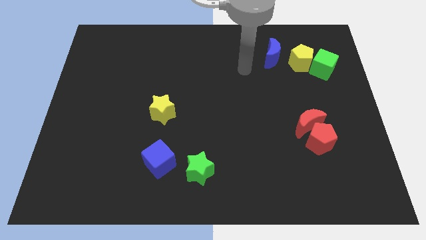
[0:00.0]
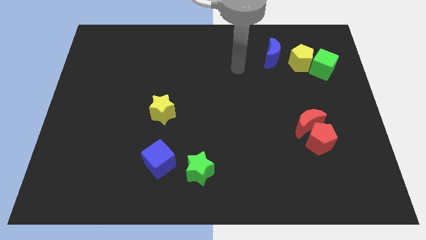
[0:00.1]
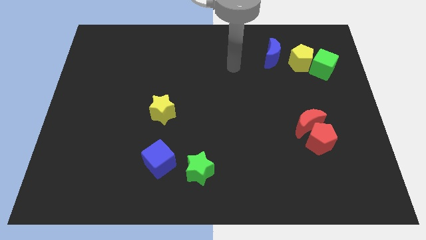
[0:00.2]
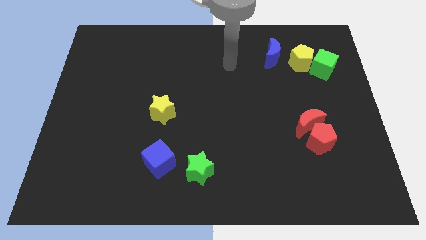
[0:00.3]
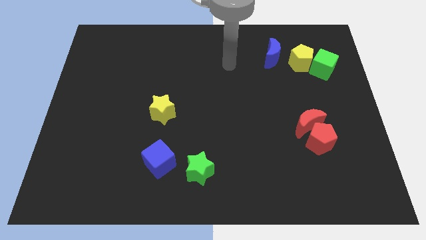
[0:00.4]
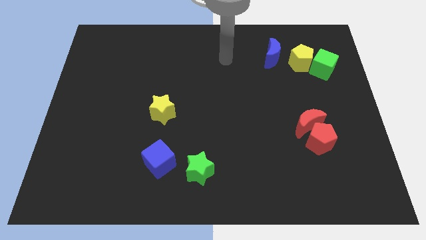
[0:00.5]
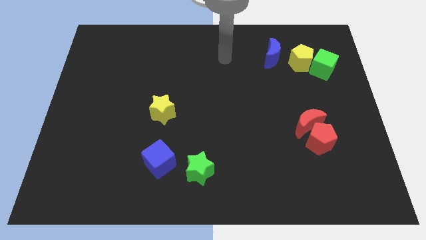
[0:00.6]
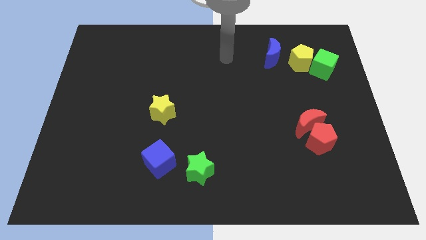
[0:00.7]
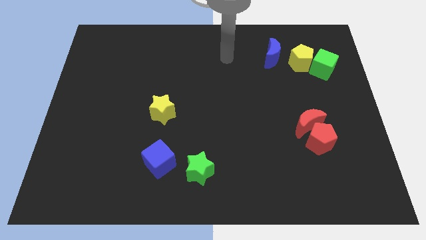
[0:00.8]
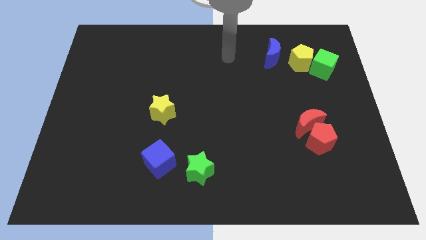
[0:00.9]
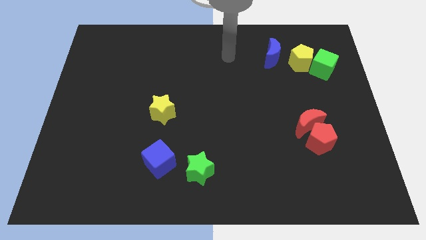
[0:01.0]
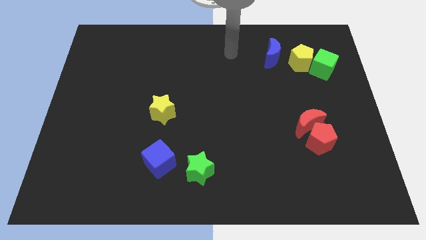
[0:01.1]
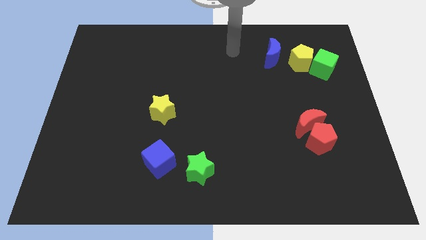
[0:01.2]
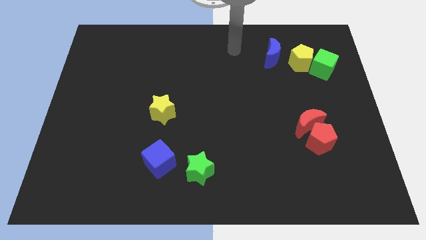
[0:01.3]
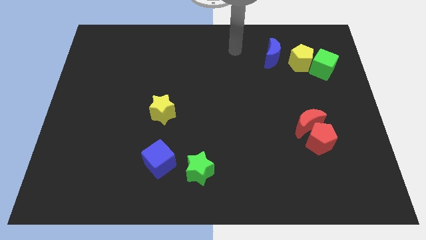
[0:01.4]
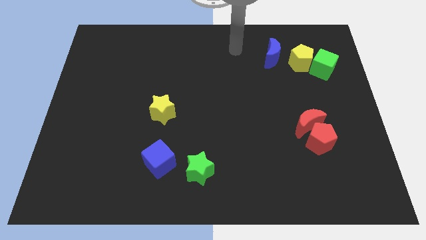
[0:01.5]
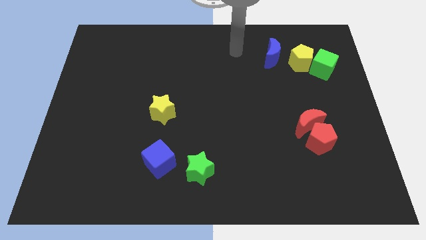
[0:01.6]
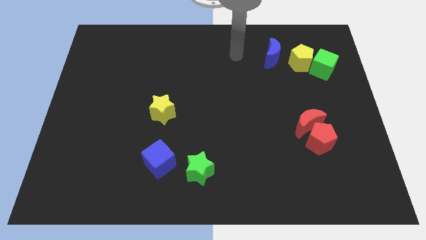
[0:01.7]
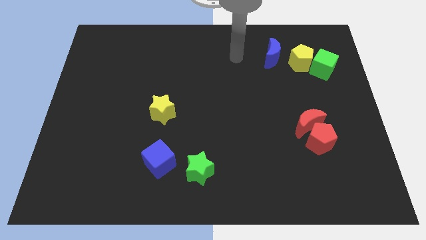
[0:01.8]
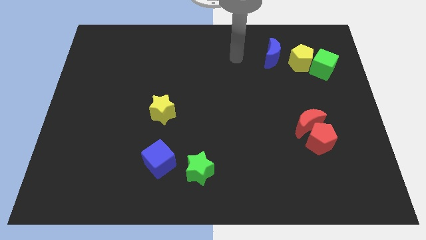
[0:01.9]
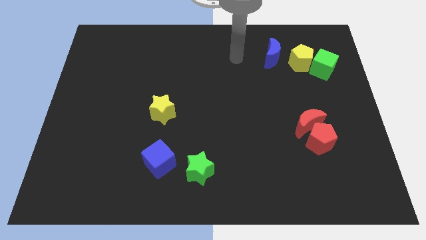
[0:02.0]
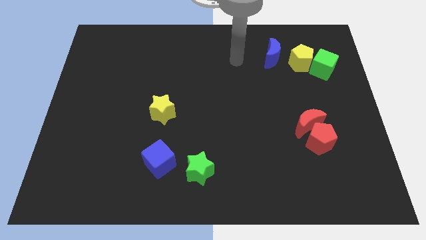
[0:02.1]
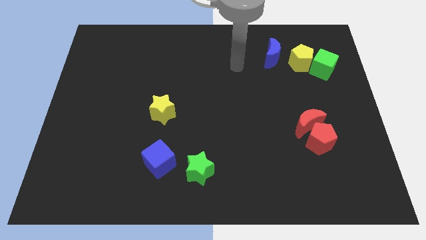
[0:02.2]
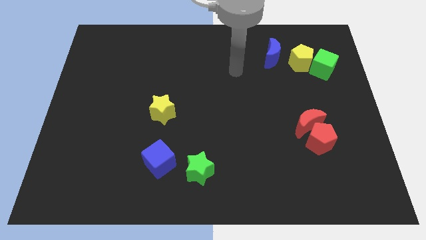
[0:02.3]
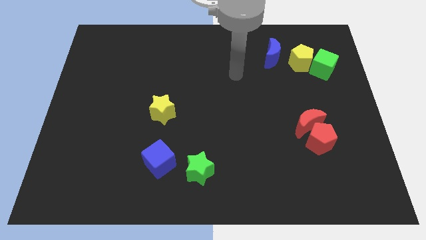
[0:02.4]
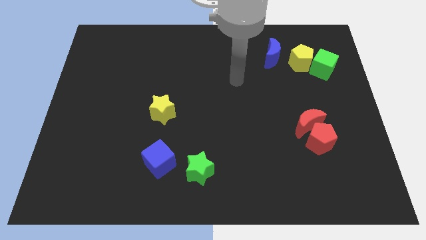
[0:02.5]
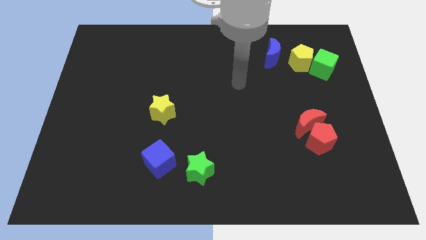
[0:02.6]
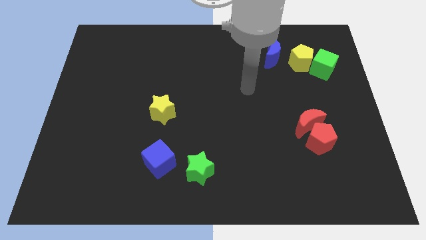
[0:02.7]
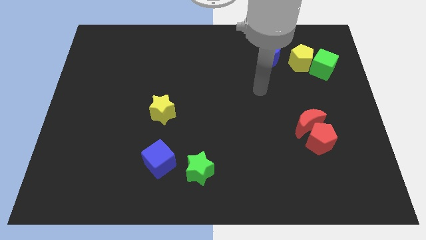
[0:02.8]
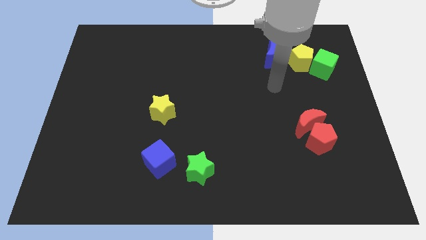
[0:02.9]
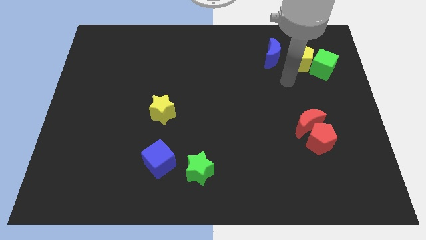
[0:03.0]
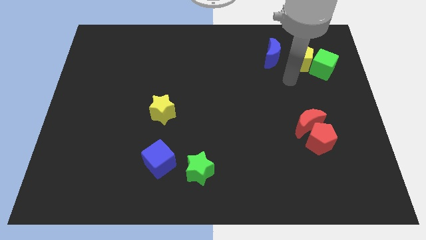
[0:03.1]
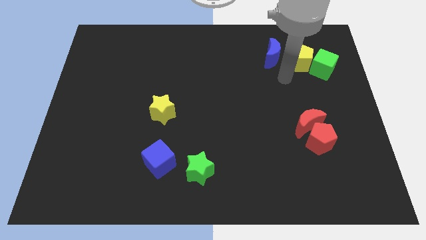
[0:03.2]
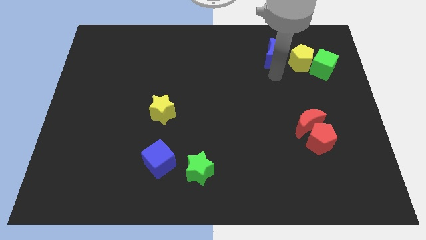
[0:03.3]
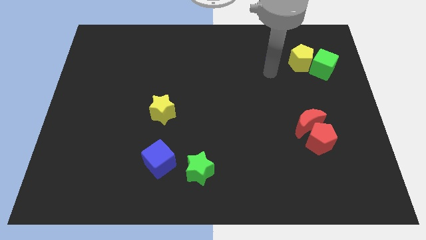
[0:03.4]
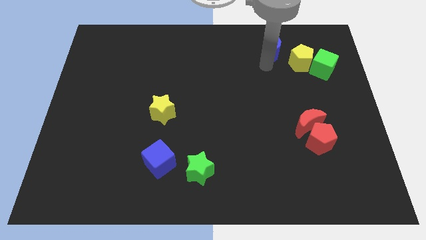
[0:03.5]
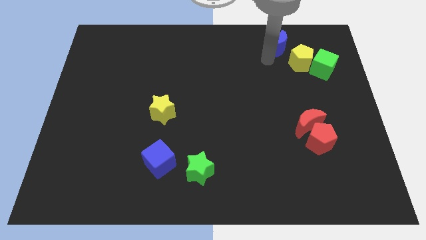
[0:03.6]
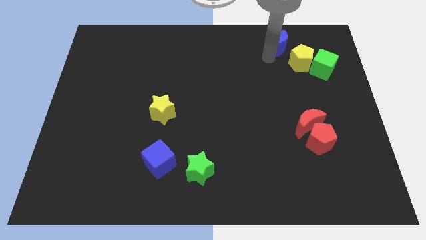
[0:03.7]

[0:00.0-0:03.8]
move your arm towards the center

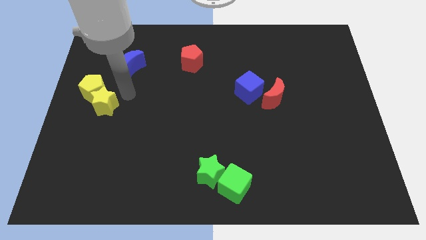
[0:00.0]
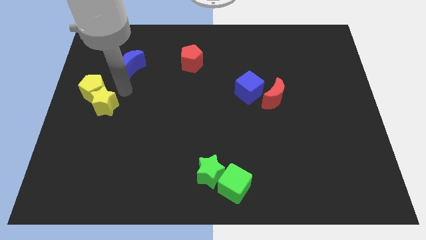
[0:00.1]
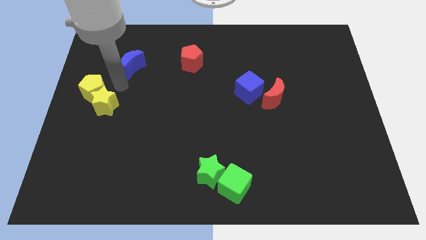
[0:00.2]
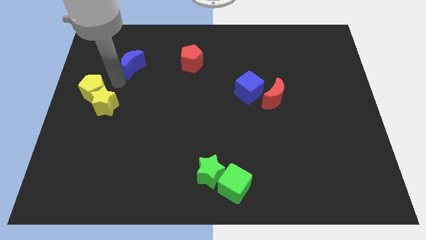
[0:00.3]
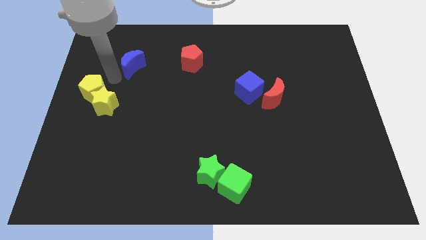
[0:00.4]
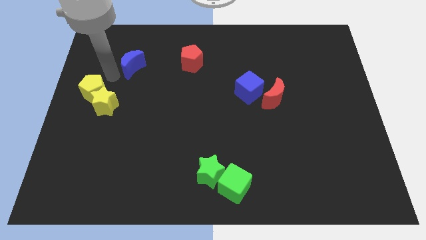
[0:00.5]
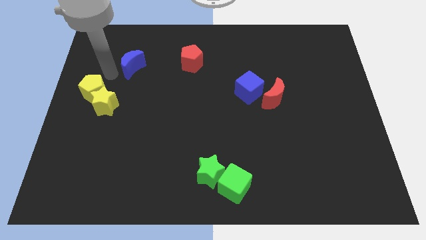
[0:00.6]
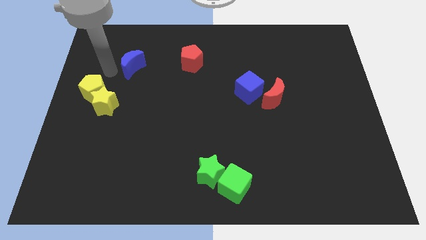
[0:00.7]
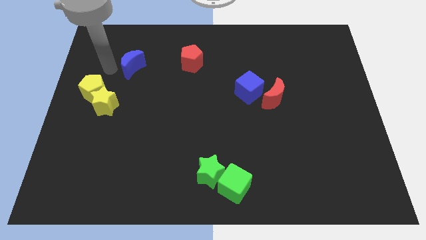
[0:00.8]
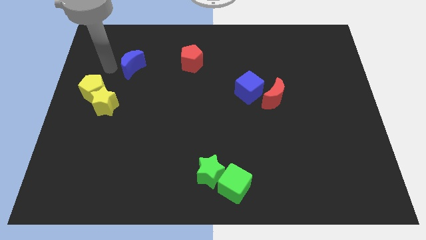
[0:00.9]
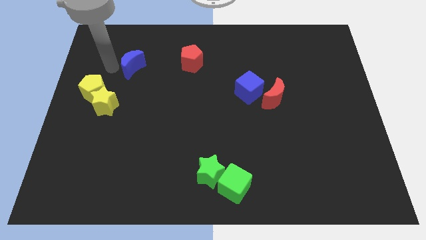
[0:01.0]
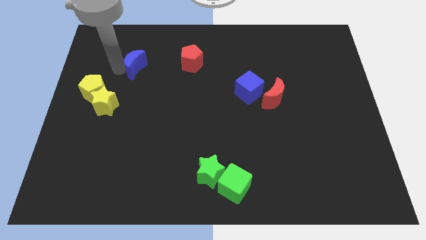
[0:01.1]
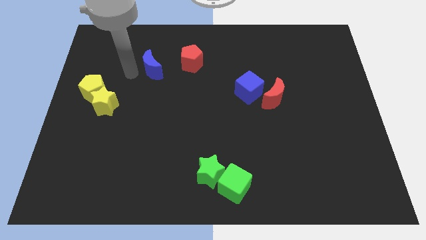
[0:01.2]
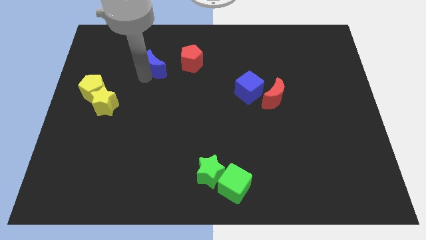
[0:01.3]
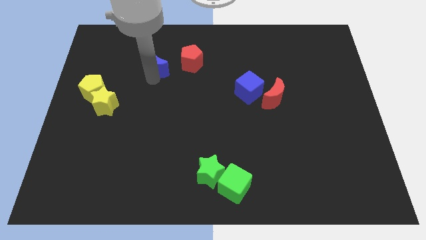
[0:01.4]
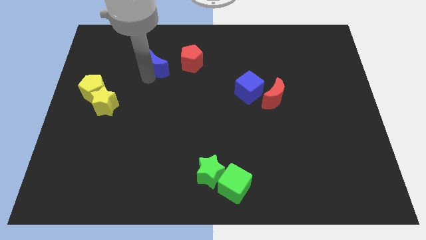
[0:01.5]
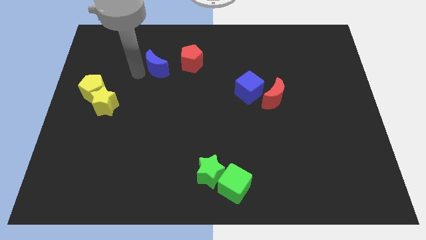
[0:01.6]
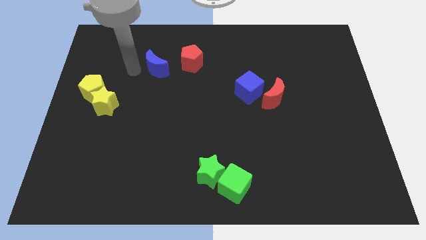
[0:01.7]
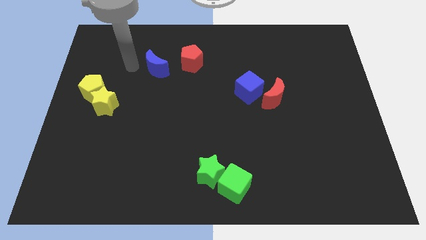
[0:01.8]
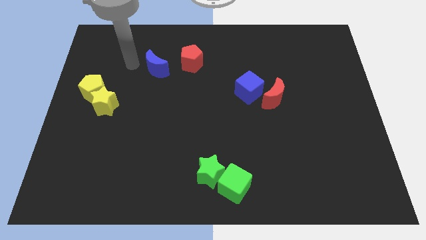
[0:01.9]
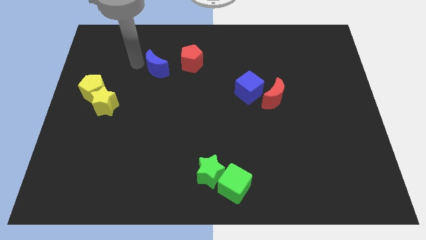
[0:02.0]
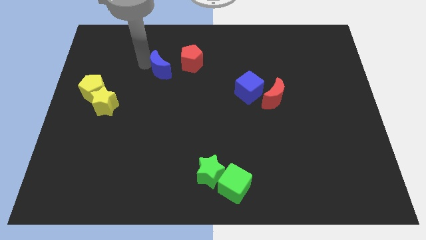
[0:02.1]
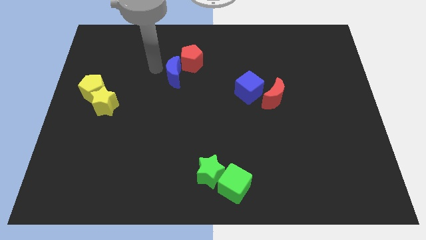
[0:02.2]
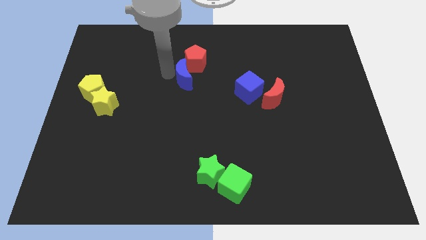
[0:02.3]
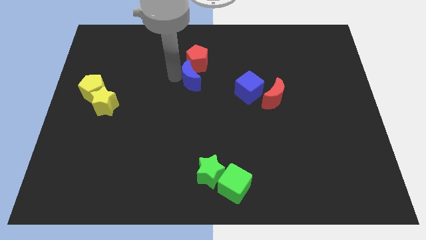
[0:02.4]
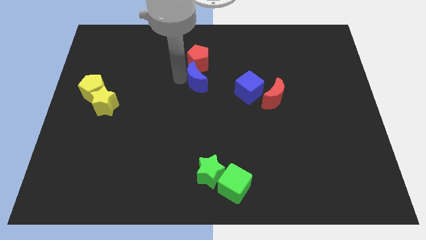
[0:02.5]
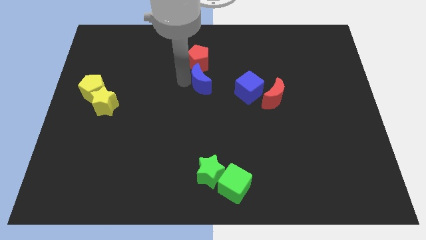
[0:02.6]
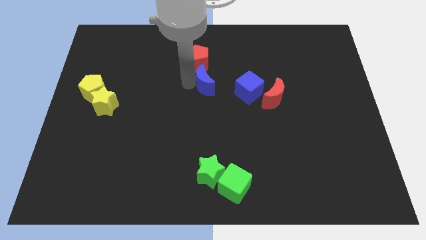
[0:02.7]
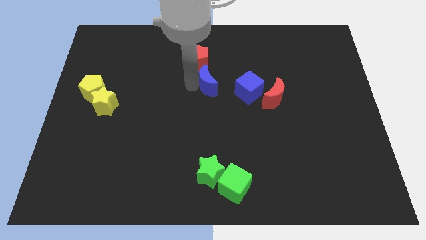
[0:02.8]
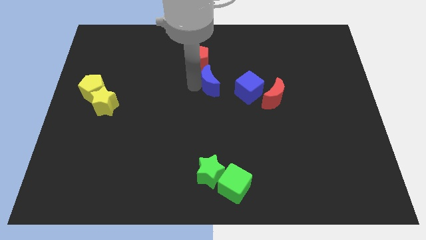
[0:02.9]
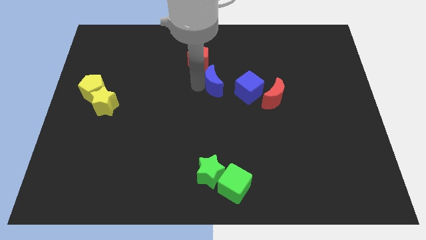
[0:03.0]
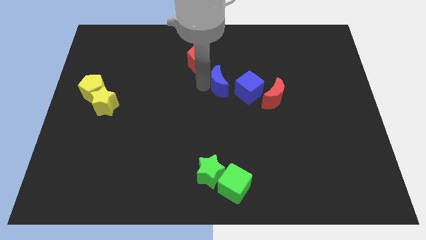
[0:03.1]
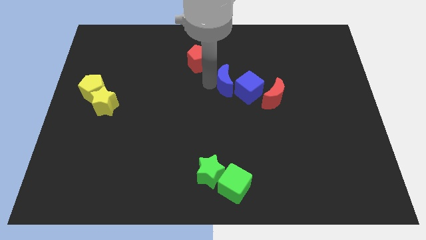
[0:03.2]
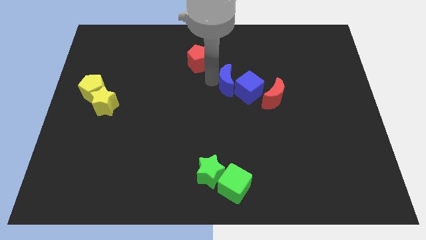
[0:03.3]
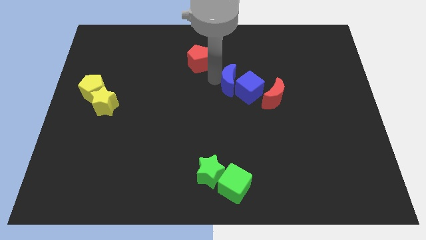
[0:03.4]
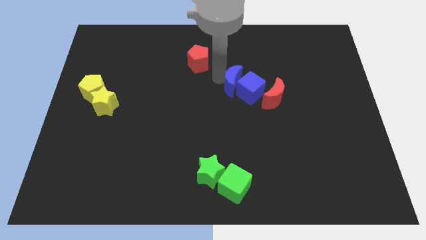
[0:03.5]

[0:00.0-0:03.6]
move blue crescent into blue cube

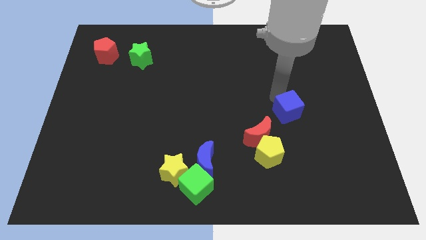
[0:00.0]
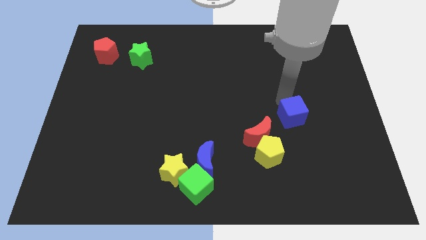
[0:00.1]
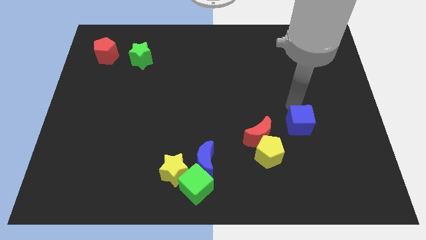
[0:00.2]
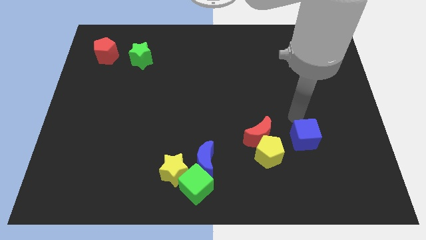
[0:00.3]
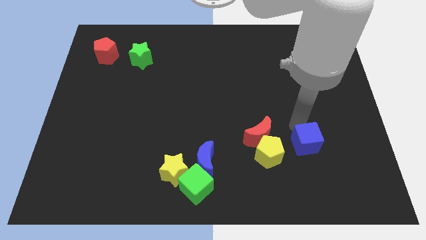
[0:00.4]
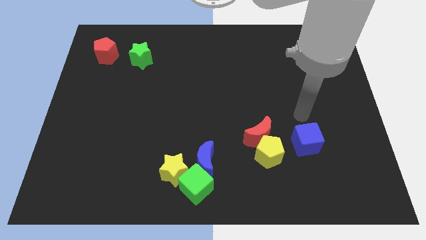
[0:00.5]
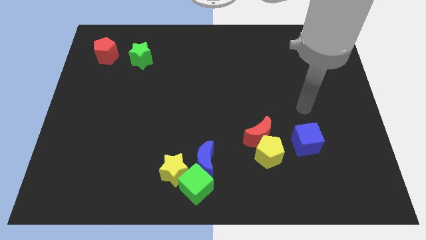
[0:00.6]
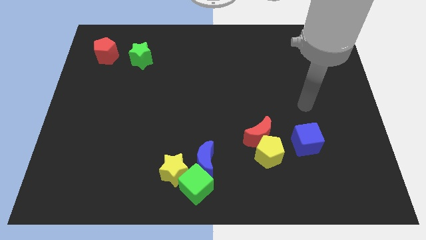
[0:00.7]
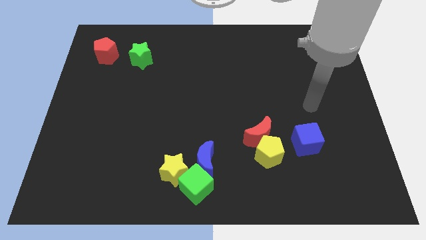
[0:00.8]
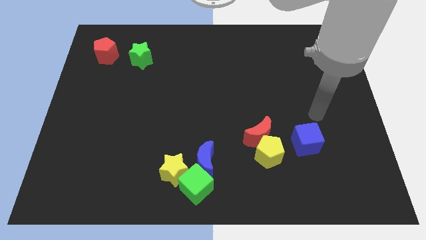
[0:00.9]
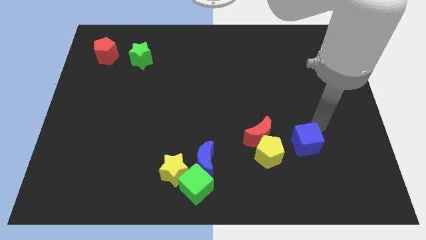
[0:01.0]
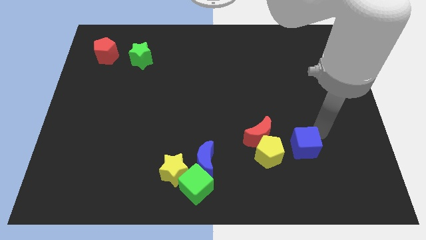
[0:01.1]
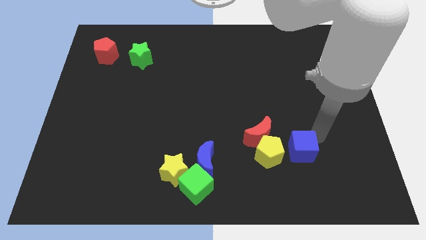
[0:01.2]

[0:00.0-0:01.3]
place blue cube to the right of yellow pentagon

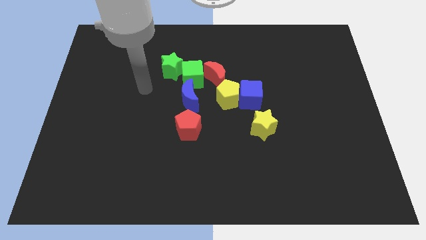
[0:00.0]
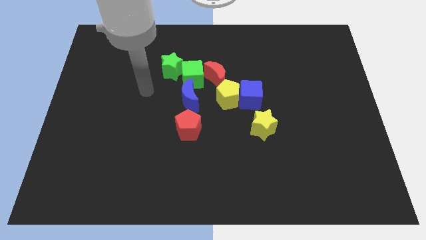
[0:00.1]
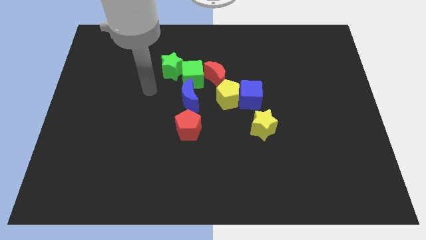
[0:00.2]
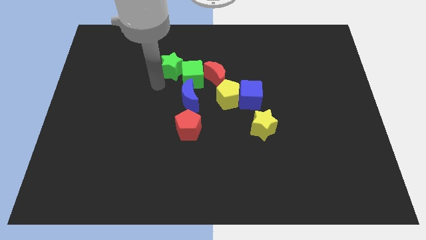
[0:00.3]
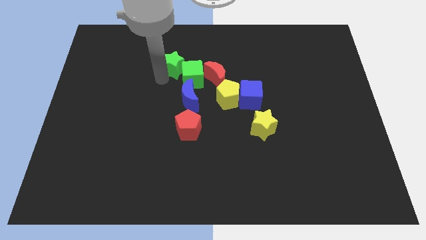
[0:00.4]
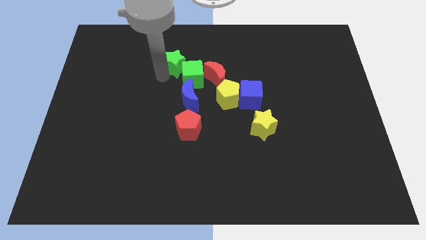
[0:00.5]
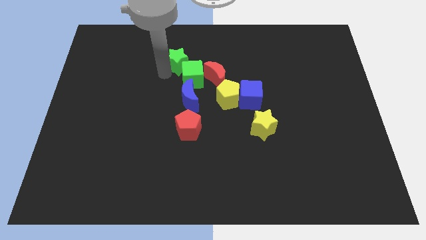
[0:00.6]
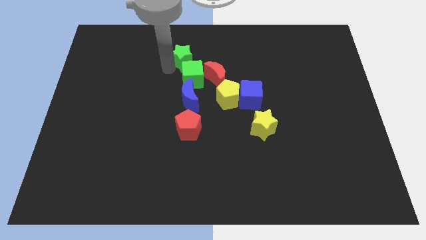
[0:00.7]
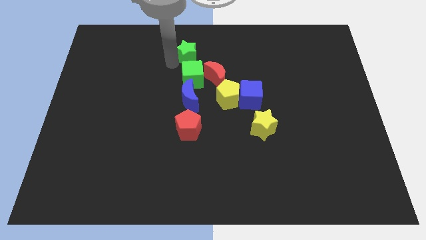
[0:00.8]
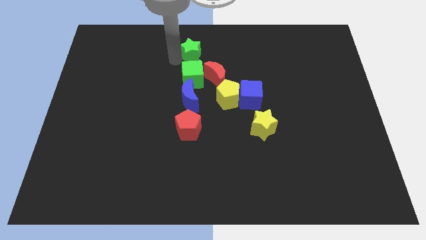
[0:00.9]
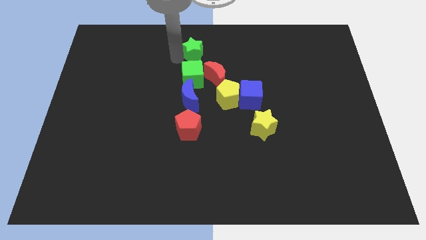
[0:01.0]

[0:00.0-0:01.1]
place green star above the green cube
